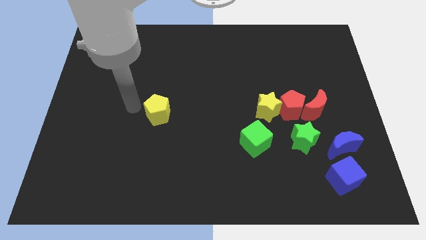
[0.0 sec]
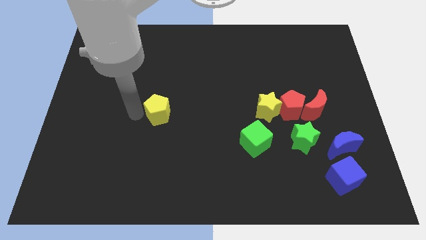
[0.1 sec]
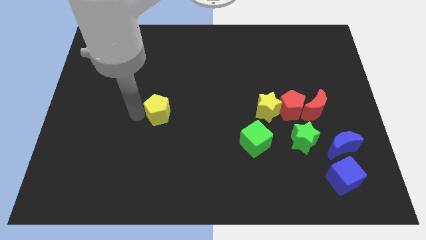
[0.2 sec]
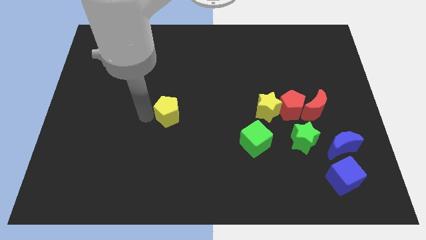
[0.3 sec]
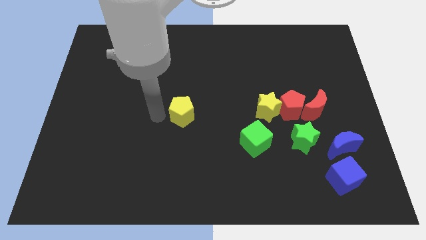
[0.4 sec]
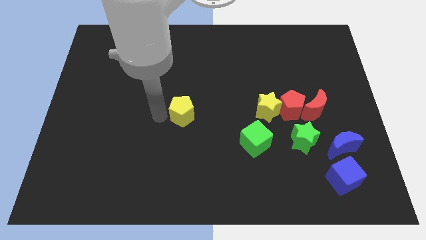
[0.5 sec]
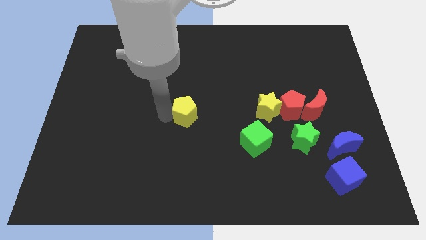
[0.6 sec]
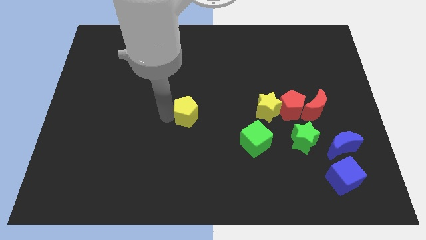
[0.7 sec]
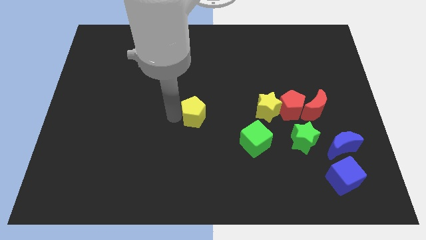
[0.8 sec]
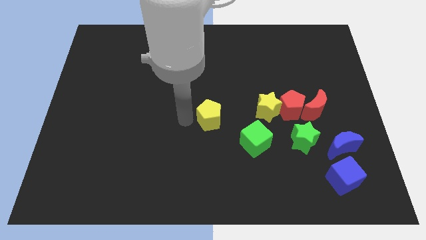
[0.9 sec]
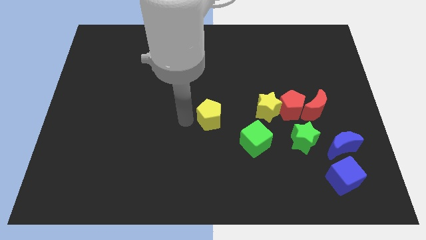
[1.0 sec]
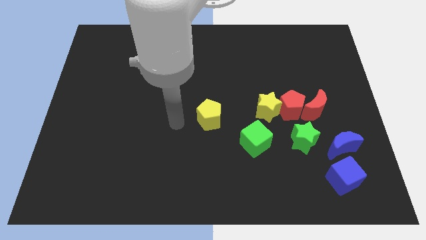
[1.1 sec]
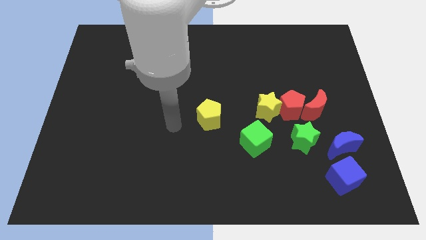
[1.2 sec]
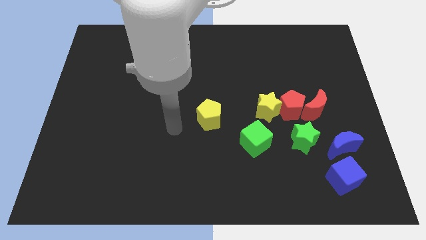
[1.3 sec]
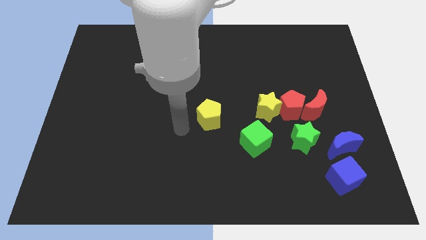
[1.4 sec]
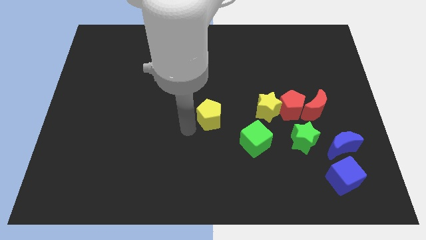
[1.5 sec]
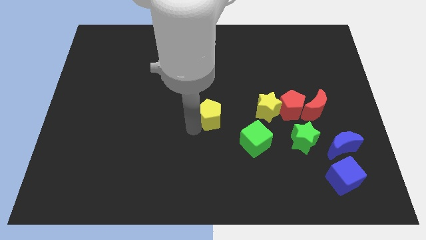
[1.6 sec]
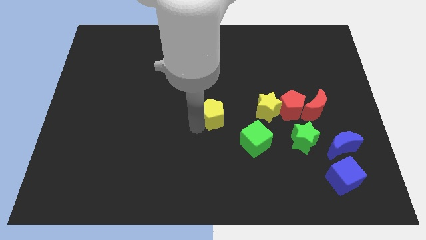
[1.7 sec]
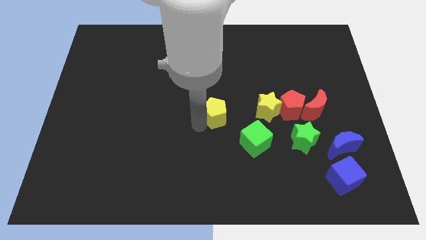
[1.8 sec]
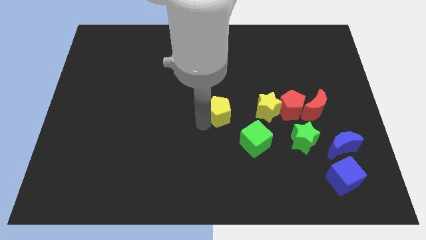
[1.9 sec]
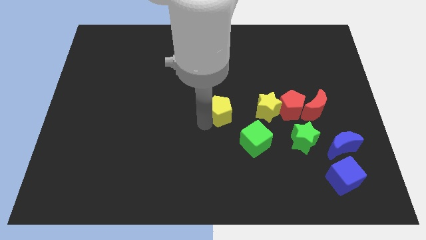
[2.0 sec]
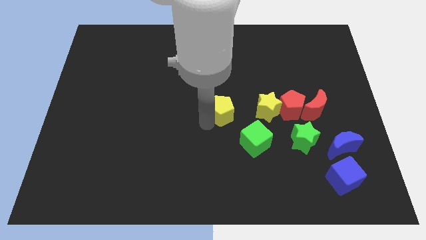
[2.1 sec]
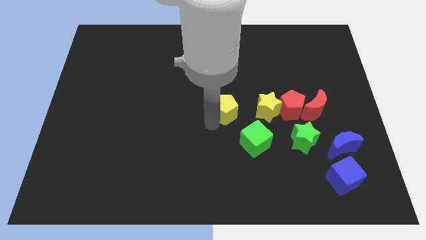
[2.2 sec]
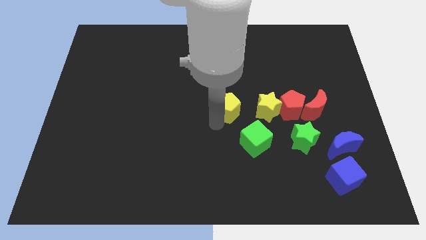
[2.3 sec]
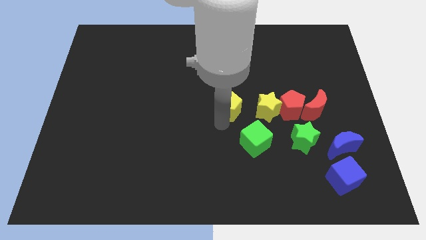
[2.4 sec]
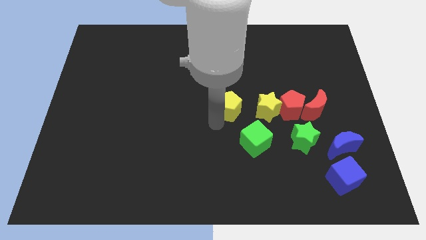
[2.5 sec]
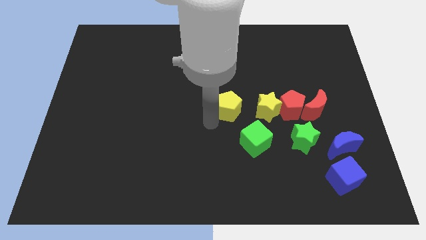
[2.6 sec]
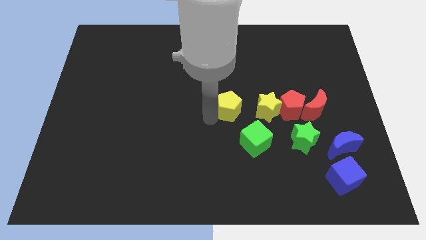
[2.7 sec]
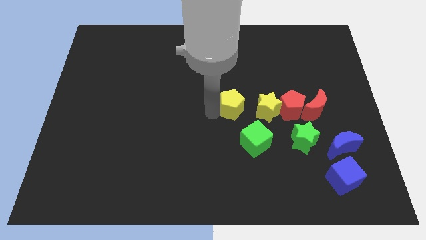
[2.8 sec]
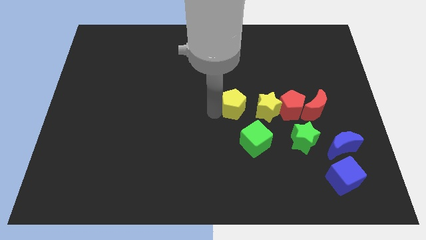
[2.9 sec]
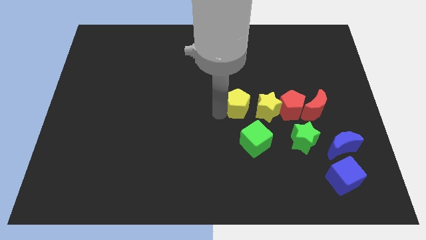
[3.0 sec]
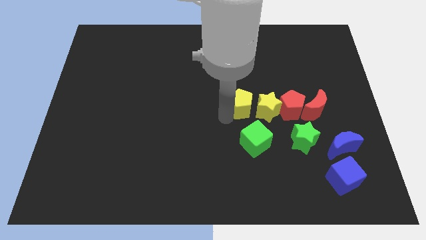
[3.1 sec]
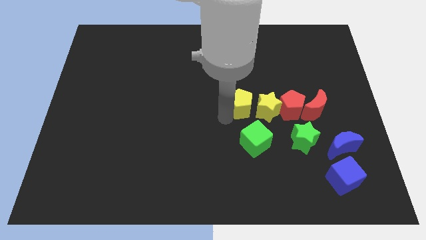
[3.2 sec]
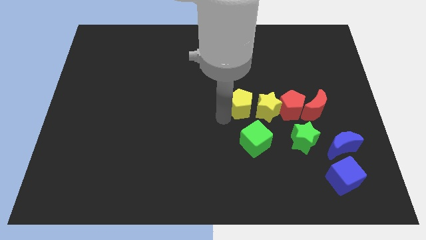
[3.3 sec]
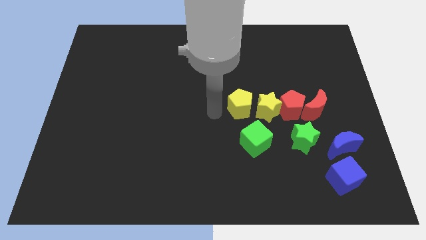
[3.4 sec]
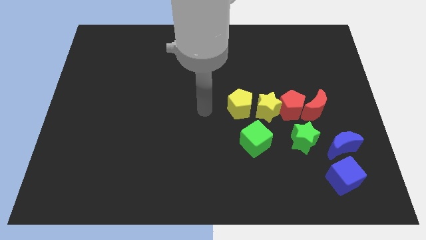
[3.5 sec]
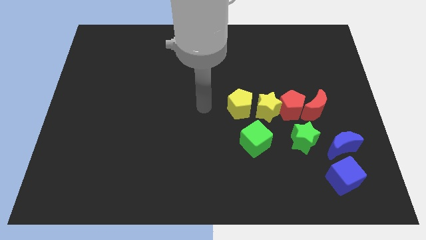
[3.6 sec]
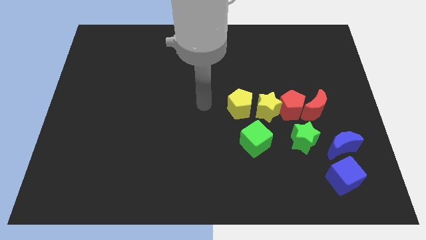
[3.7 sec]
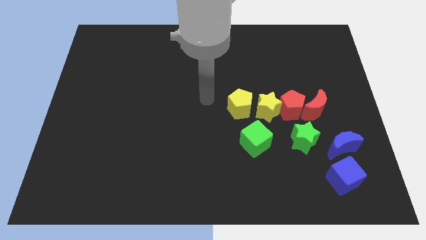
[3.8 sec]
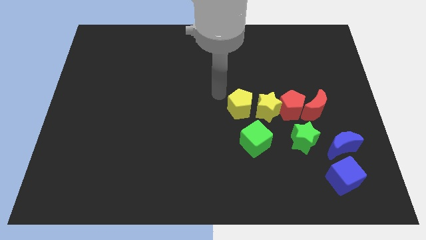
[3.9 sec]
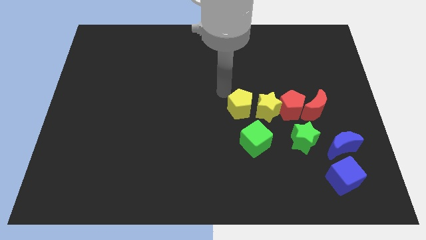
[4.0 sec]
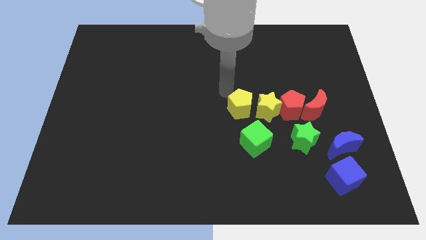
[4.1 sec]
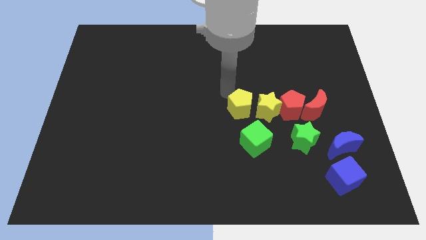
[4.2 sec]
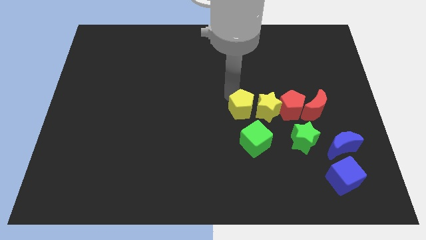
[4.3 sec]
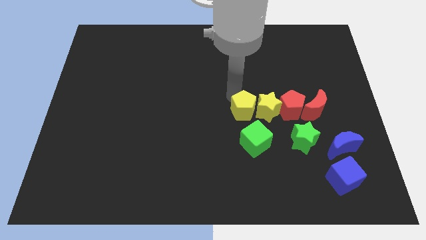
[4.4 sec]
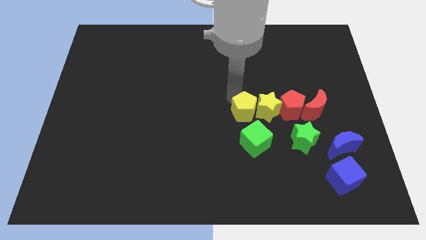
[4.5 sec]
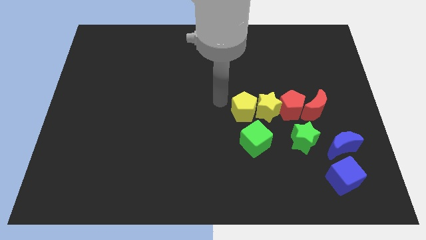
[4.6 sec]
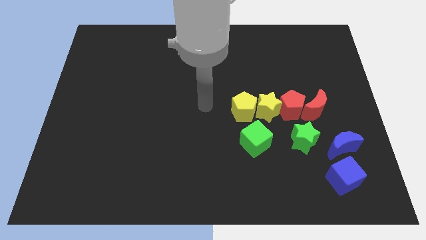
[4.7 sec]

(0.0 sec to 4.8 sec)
place the yellow pentagon to the left side of yellow star

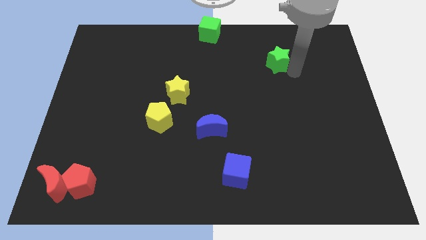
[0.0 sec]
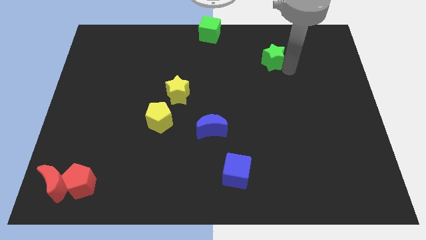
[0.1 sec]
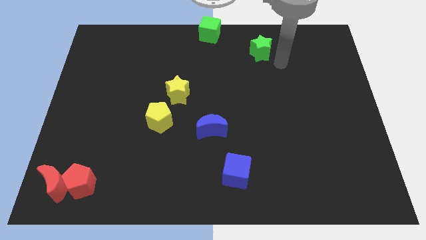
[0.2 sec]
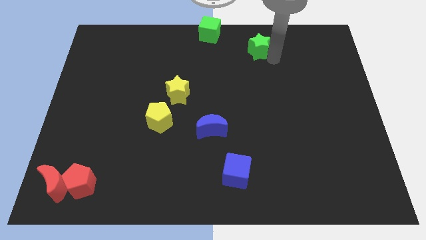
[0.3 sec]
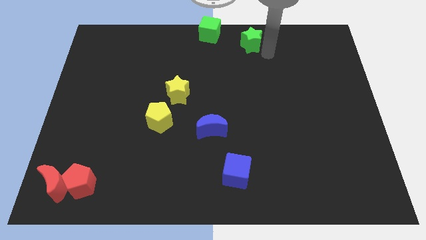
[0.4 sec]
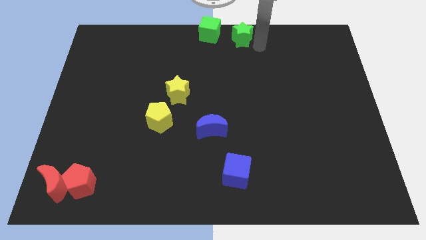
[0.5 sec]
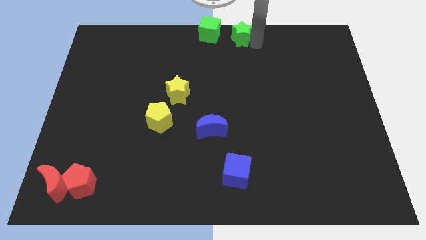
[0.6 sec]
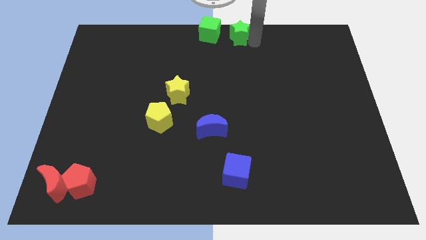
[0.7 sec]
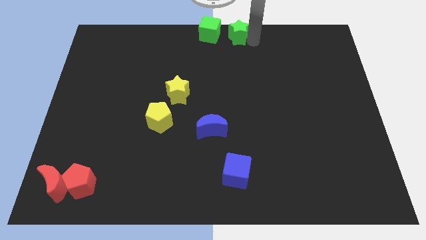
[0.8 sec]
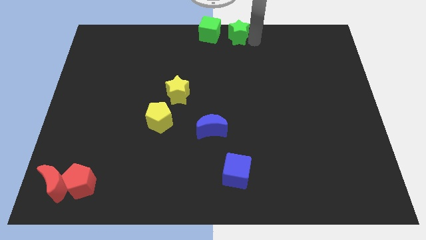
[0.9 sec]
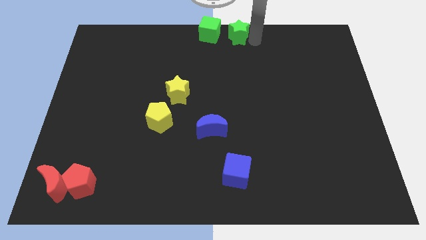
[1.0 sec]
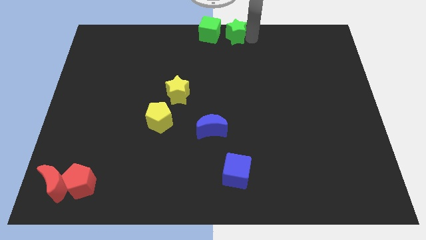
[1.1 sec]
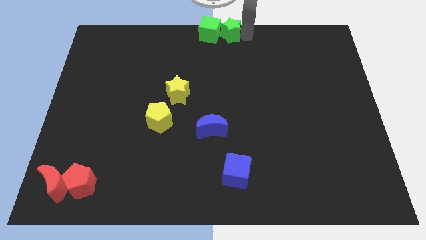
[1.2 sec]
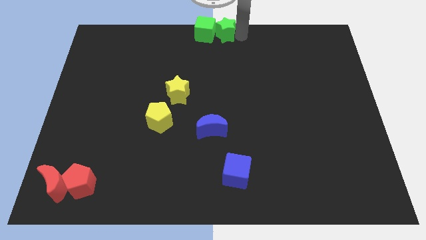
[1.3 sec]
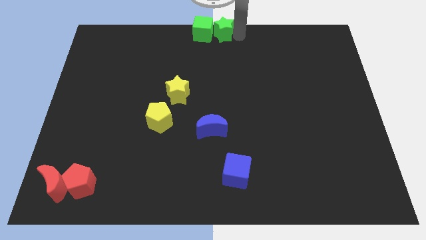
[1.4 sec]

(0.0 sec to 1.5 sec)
push the green star into green cube

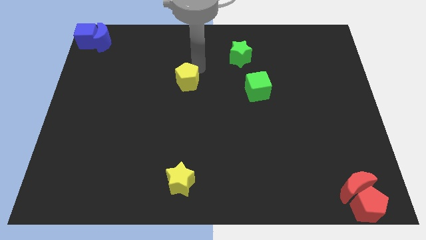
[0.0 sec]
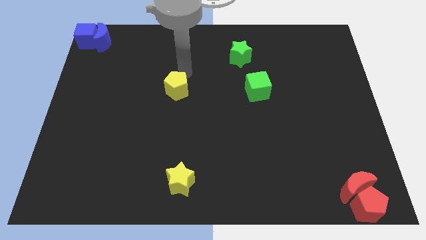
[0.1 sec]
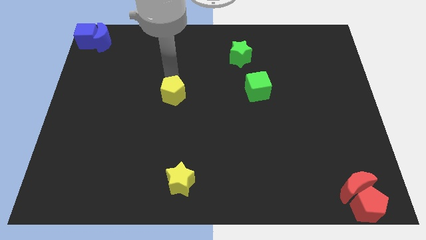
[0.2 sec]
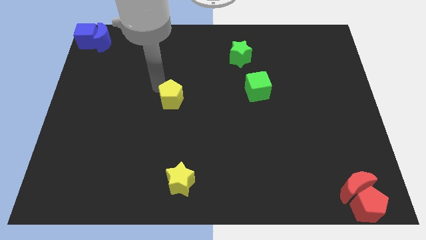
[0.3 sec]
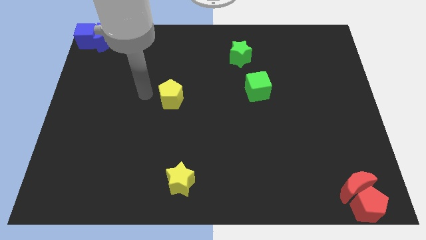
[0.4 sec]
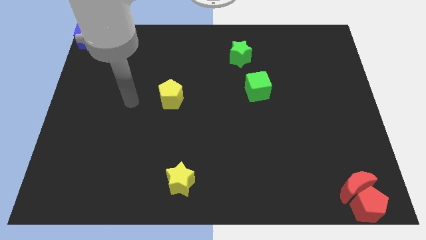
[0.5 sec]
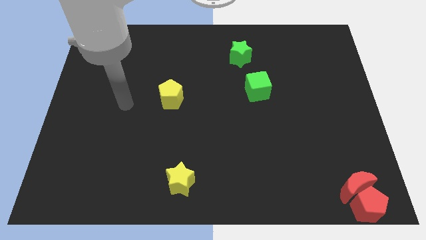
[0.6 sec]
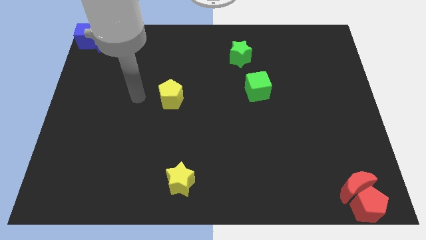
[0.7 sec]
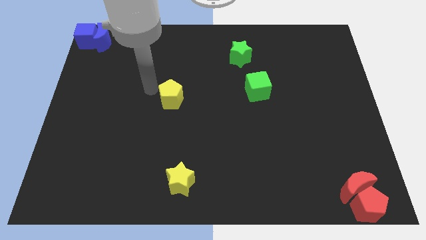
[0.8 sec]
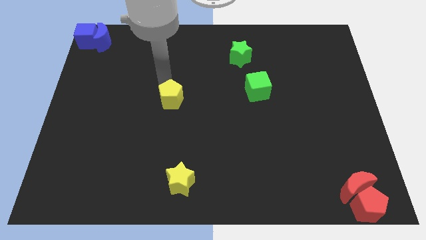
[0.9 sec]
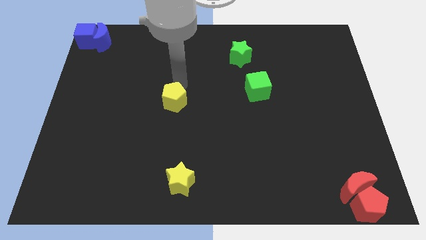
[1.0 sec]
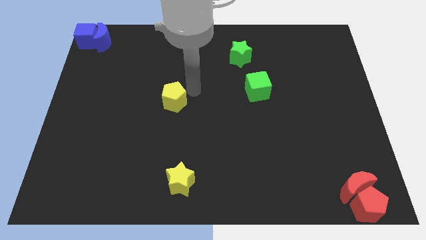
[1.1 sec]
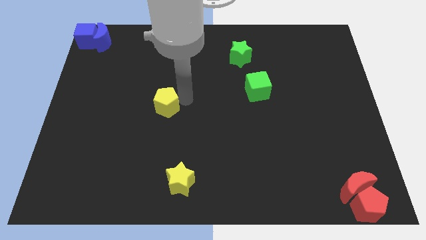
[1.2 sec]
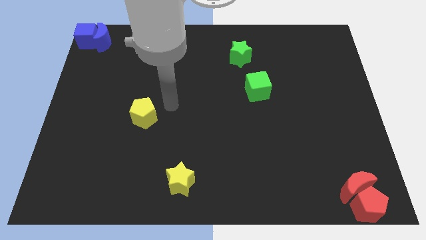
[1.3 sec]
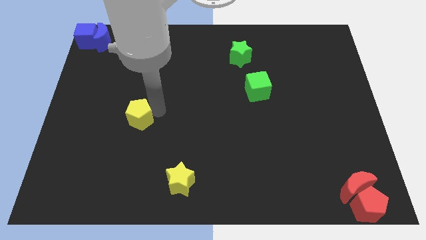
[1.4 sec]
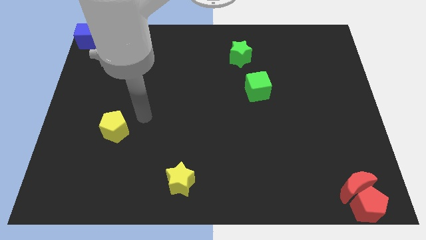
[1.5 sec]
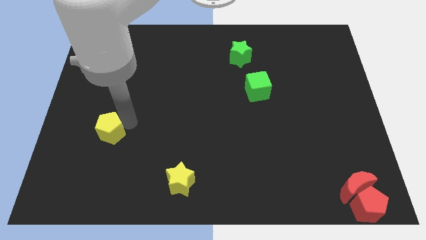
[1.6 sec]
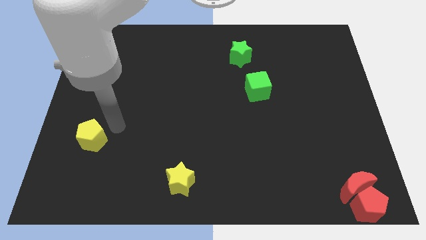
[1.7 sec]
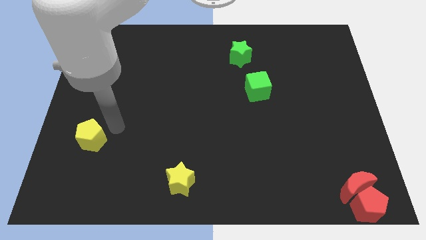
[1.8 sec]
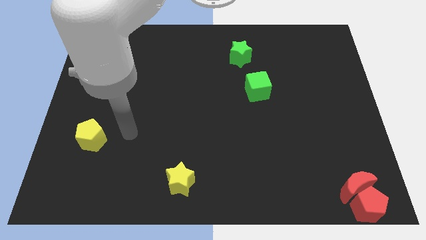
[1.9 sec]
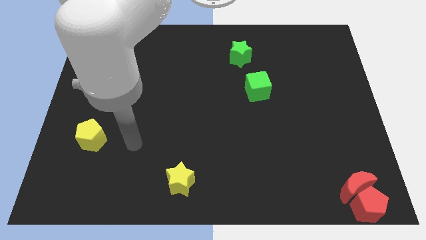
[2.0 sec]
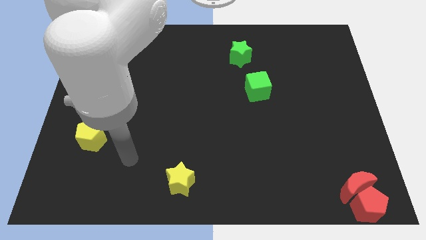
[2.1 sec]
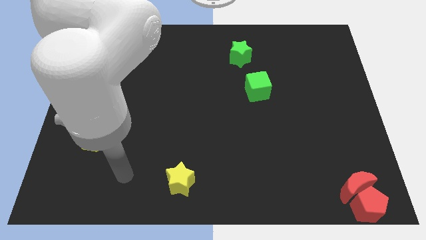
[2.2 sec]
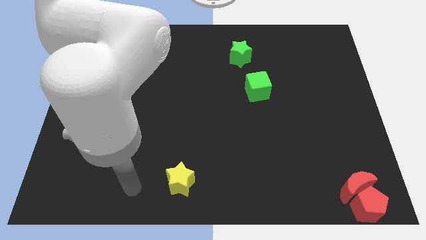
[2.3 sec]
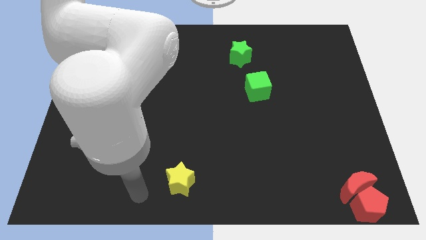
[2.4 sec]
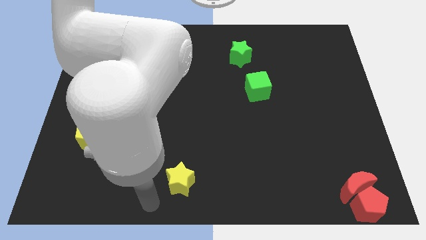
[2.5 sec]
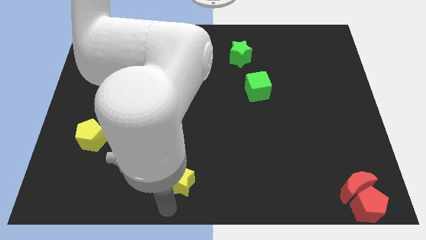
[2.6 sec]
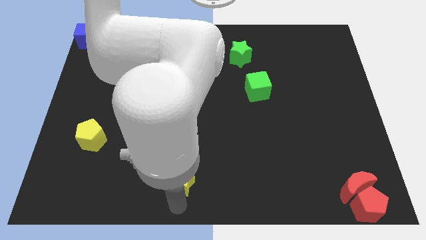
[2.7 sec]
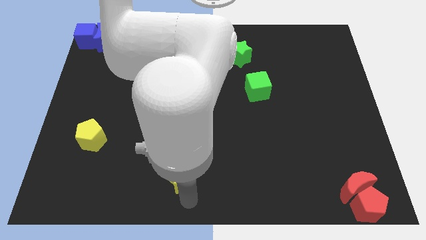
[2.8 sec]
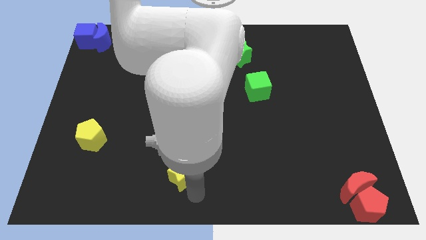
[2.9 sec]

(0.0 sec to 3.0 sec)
move the yellow pentagon diagonally top left to the yellow star
